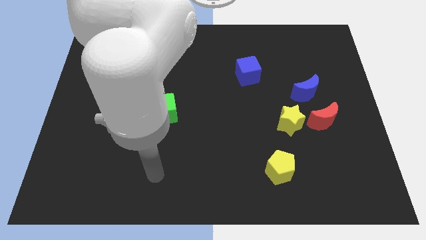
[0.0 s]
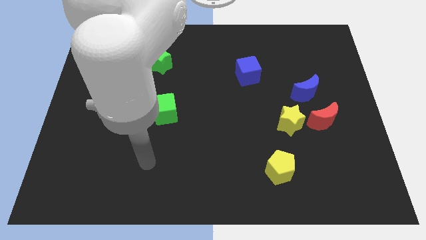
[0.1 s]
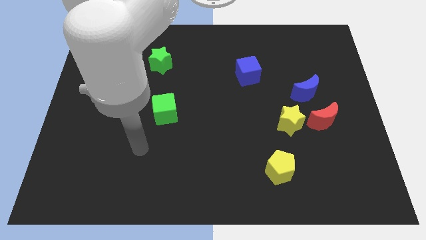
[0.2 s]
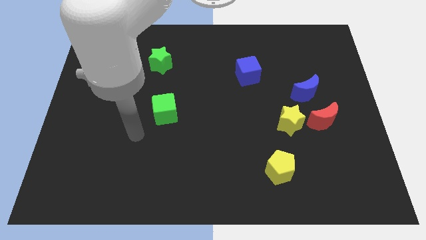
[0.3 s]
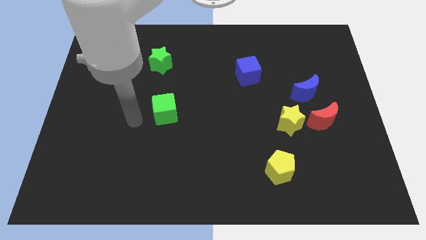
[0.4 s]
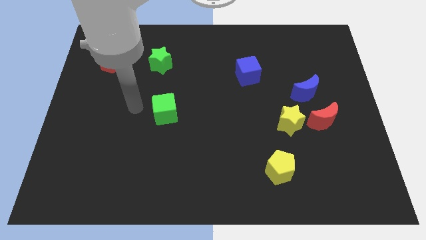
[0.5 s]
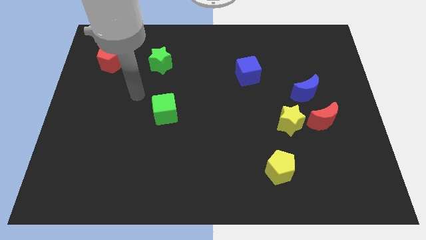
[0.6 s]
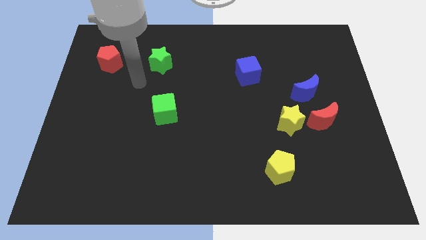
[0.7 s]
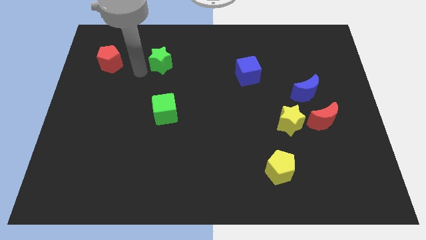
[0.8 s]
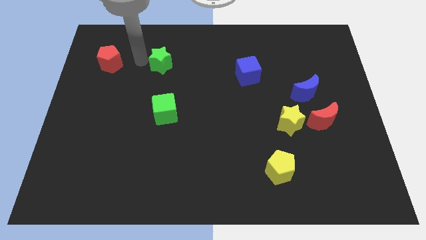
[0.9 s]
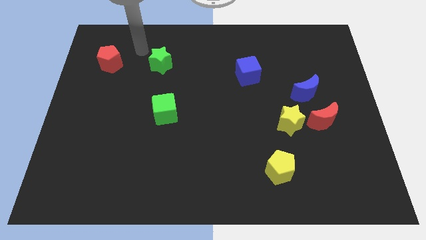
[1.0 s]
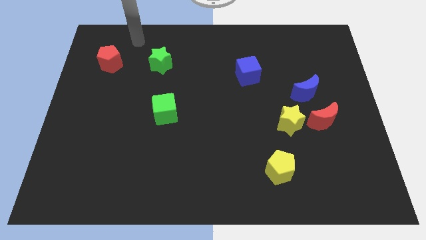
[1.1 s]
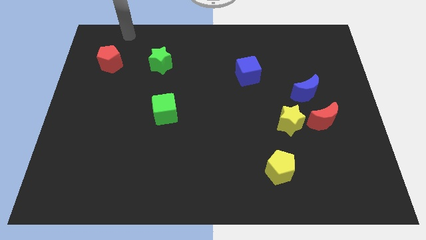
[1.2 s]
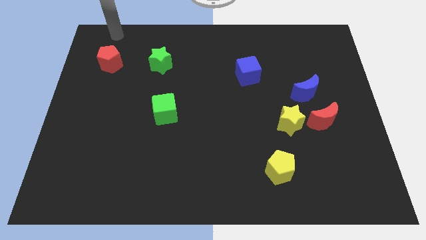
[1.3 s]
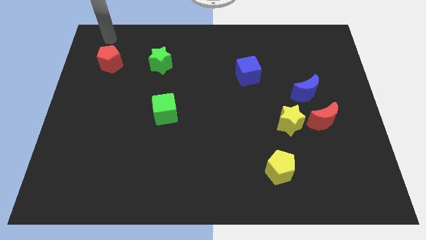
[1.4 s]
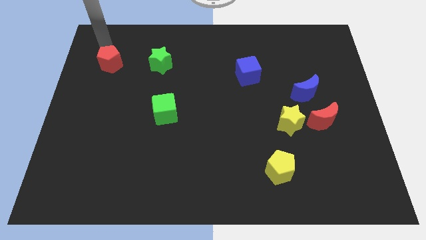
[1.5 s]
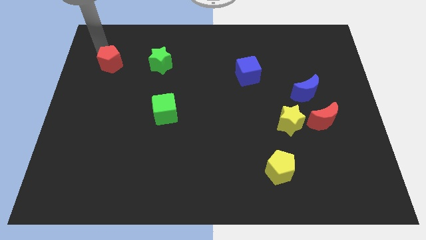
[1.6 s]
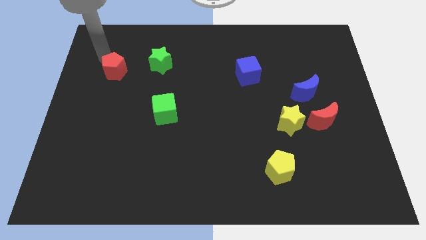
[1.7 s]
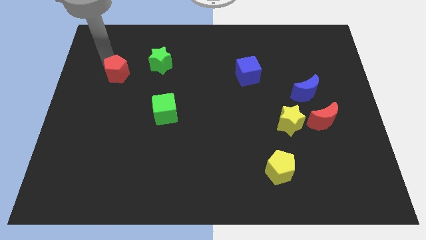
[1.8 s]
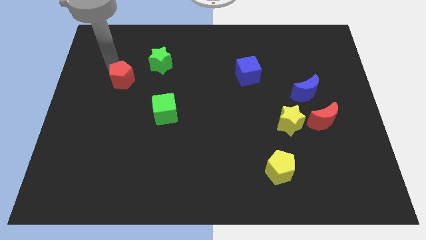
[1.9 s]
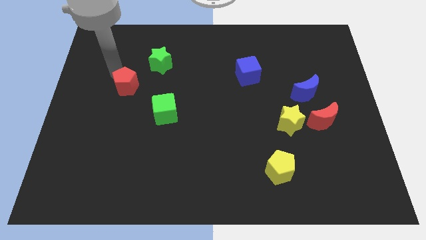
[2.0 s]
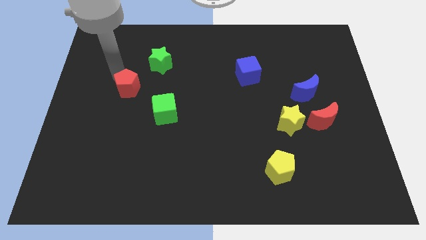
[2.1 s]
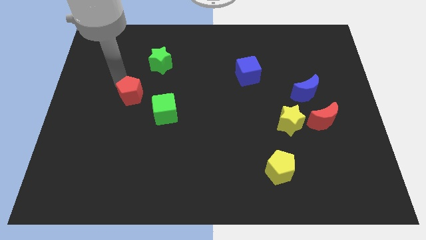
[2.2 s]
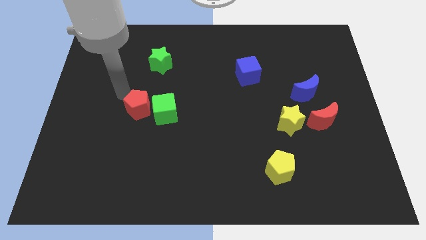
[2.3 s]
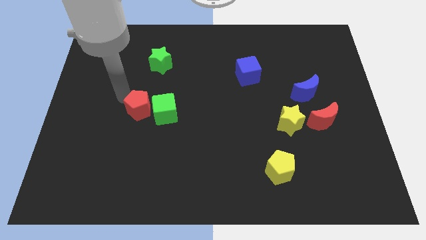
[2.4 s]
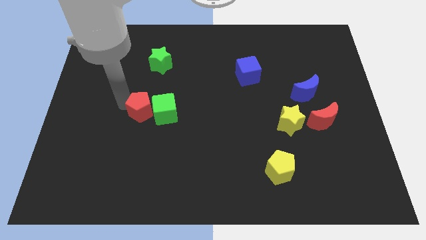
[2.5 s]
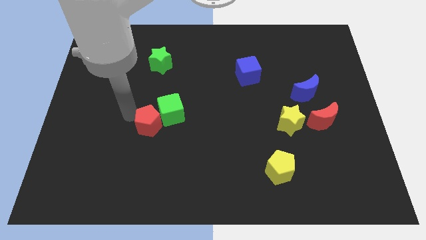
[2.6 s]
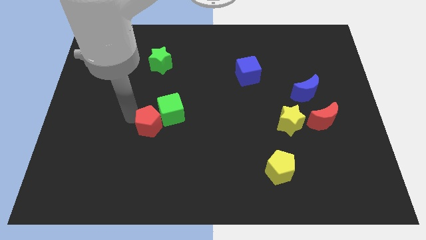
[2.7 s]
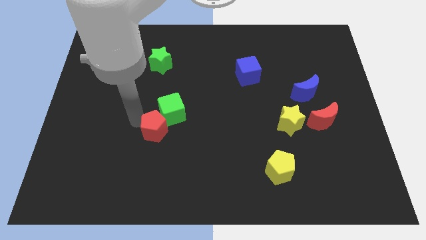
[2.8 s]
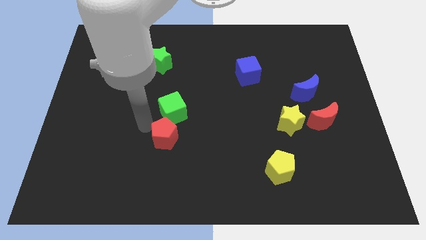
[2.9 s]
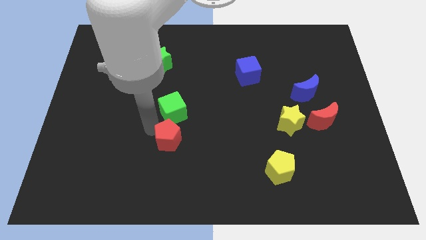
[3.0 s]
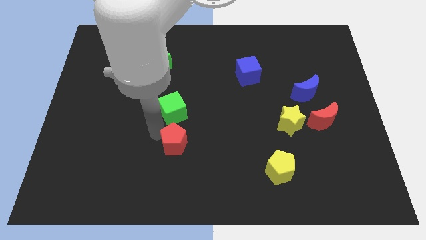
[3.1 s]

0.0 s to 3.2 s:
place the red pentagon vertically below the green cube

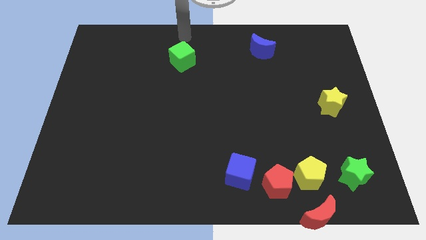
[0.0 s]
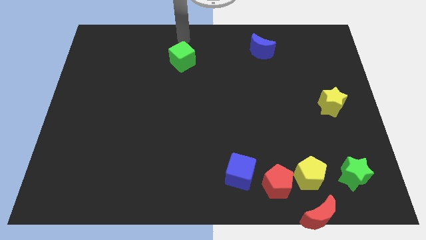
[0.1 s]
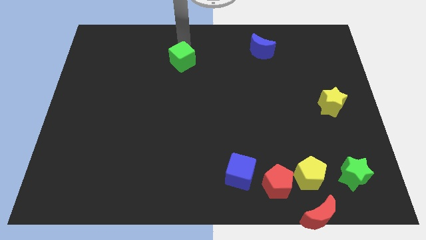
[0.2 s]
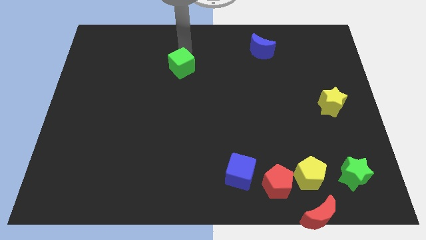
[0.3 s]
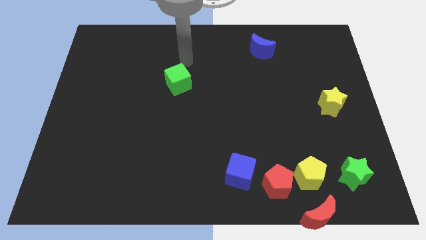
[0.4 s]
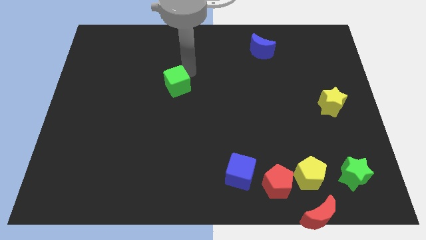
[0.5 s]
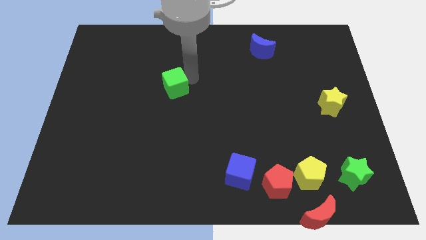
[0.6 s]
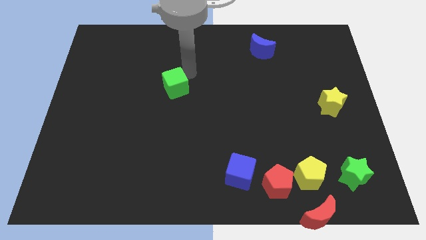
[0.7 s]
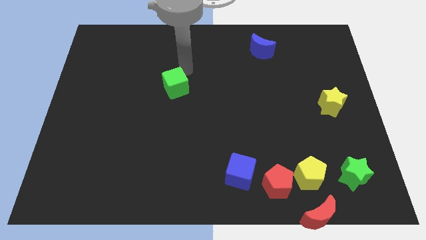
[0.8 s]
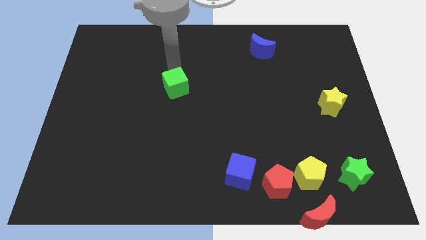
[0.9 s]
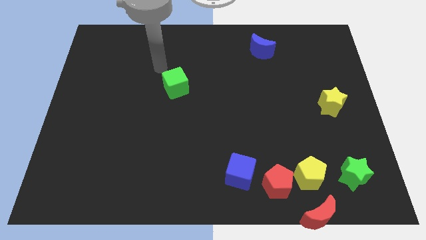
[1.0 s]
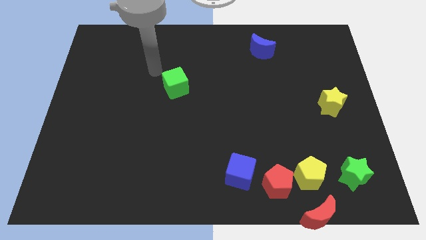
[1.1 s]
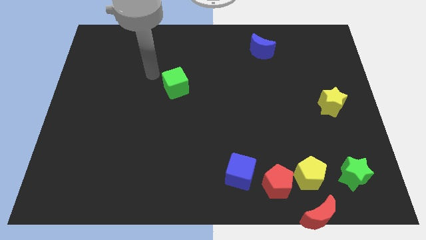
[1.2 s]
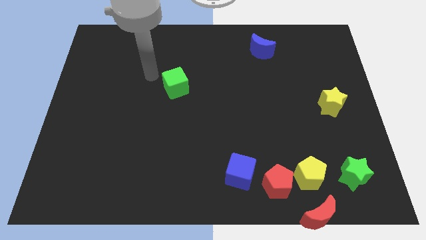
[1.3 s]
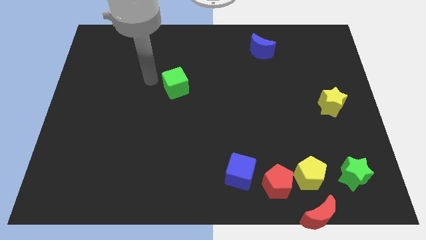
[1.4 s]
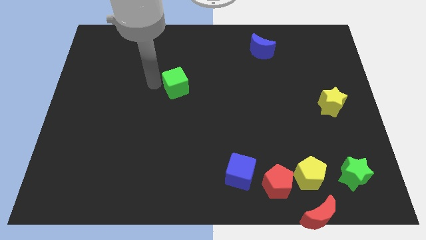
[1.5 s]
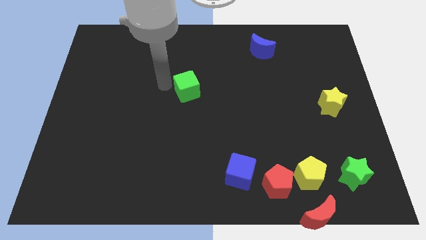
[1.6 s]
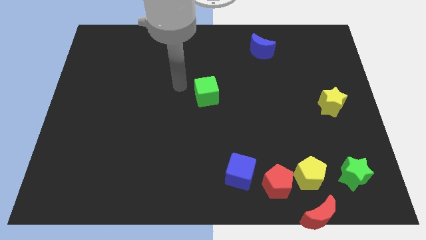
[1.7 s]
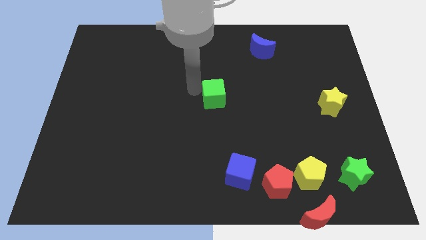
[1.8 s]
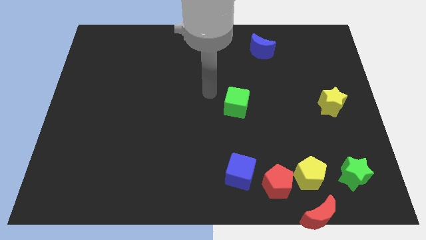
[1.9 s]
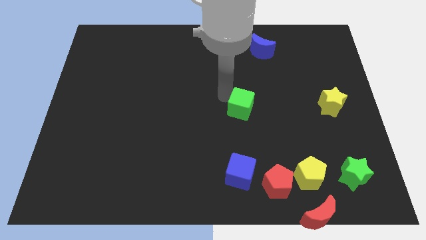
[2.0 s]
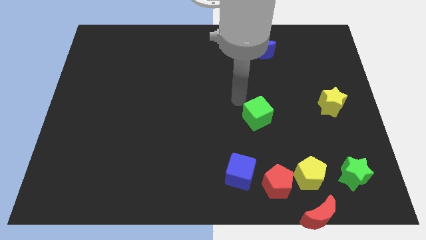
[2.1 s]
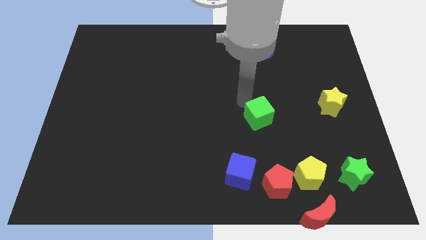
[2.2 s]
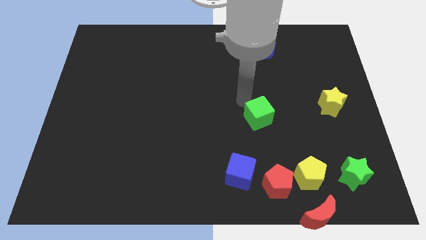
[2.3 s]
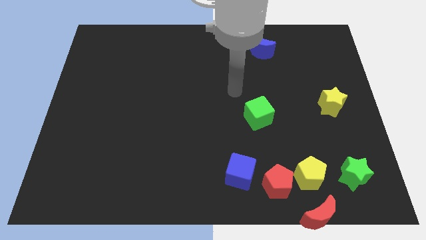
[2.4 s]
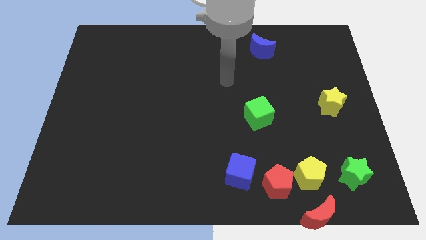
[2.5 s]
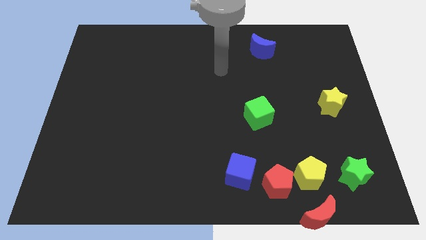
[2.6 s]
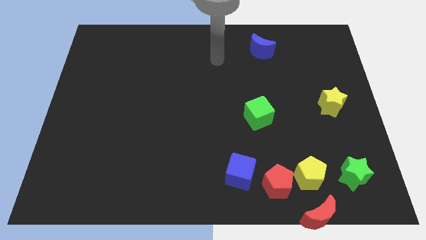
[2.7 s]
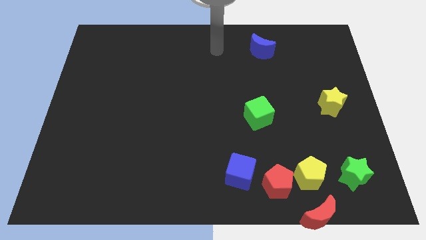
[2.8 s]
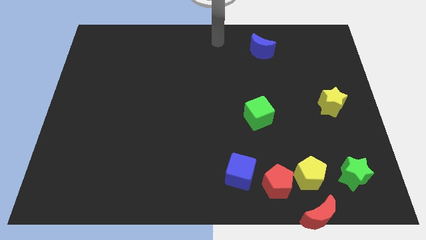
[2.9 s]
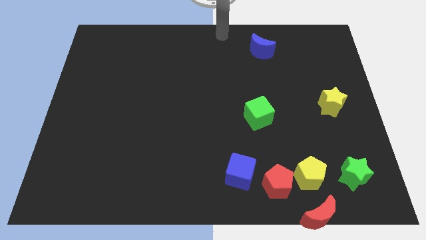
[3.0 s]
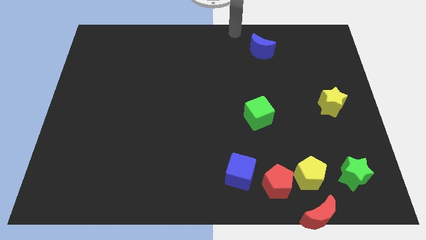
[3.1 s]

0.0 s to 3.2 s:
put the green cube at the top side of the red pentagon

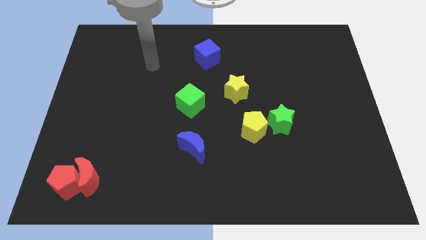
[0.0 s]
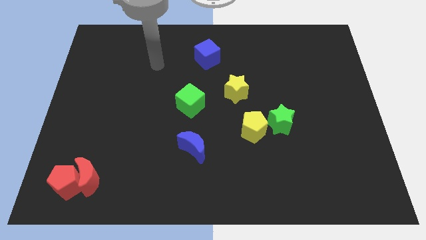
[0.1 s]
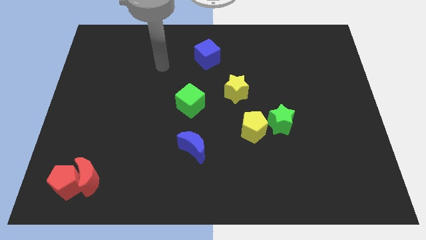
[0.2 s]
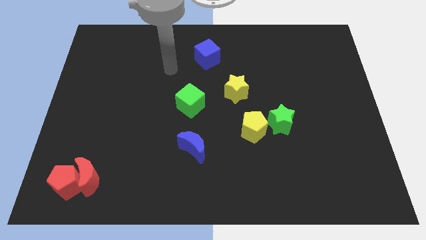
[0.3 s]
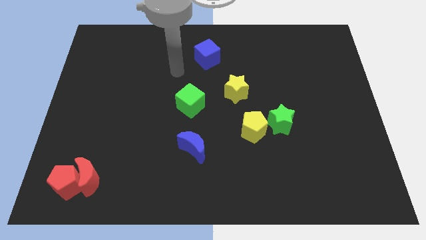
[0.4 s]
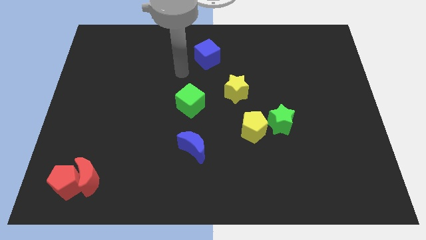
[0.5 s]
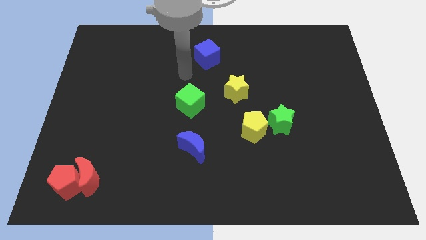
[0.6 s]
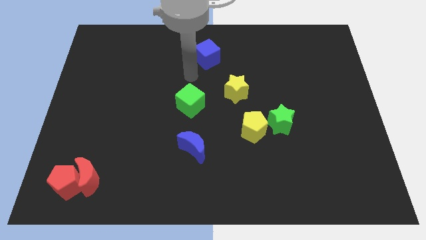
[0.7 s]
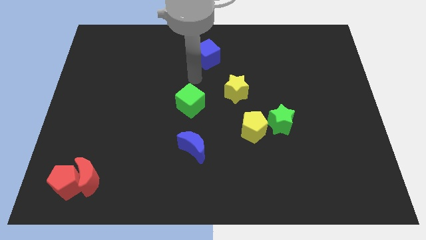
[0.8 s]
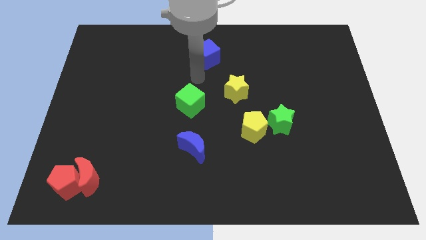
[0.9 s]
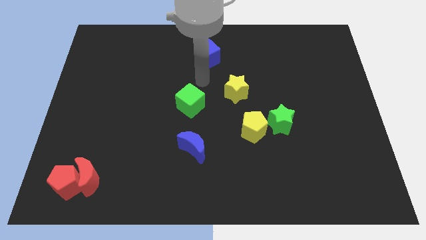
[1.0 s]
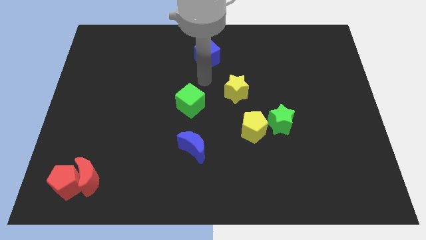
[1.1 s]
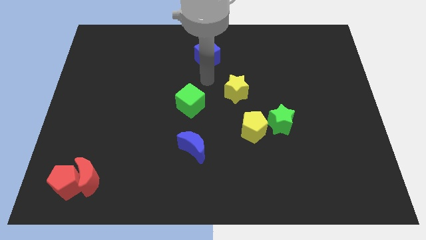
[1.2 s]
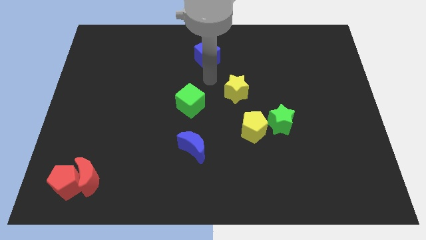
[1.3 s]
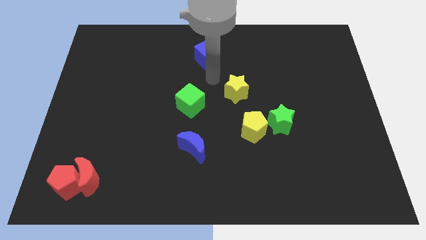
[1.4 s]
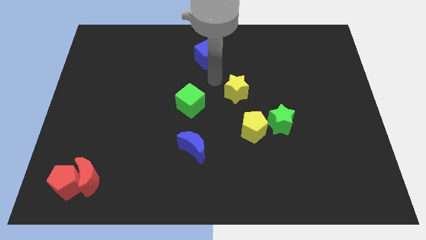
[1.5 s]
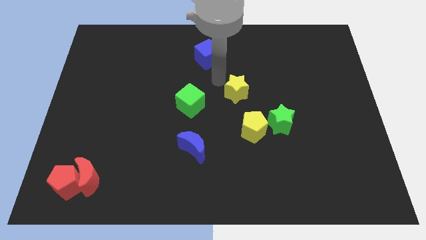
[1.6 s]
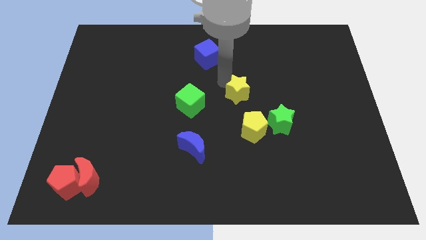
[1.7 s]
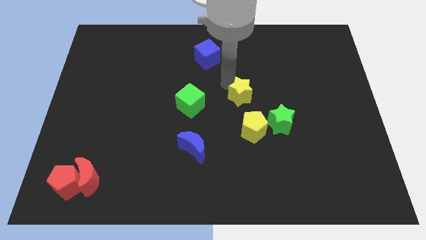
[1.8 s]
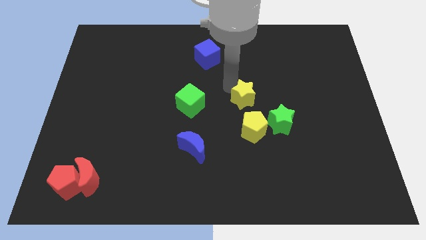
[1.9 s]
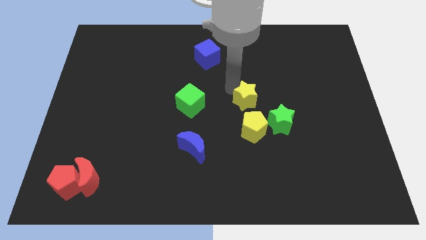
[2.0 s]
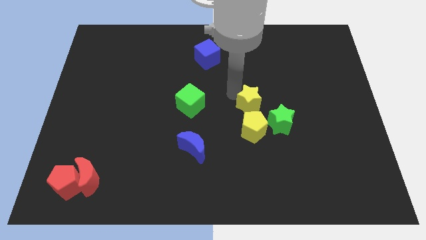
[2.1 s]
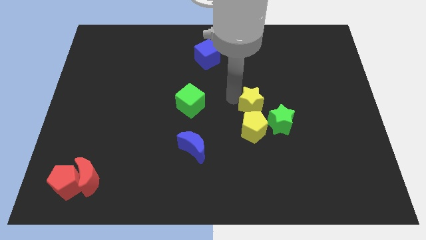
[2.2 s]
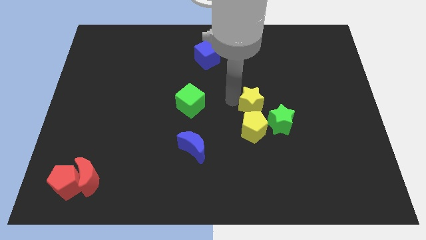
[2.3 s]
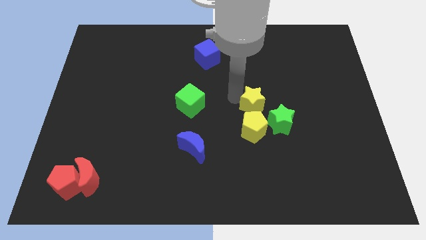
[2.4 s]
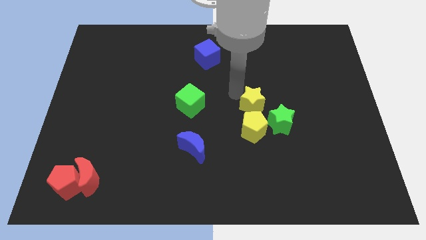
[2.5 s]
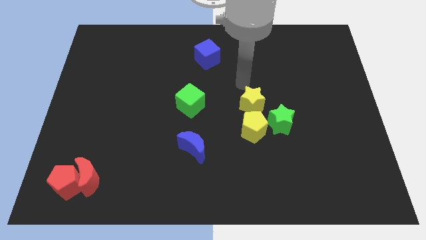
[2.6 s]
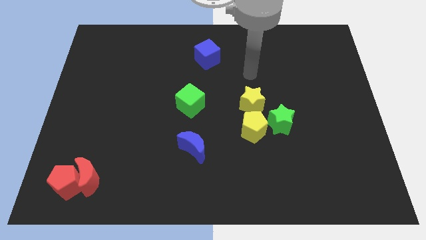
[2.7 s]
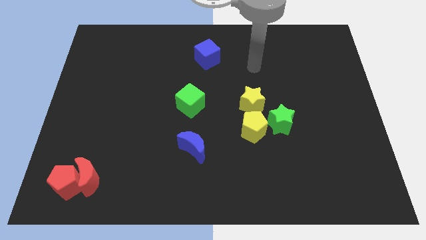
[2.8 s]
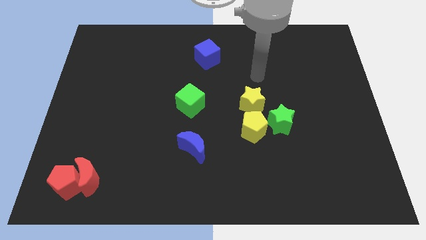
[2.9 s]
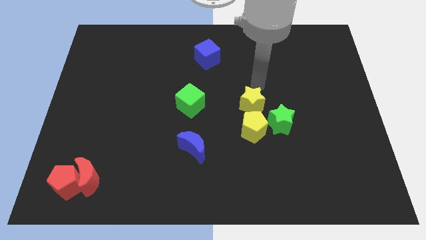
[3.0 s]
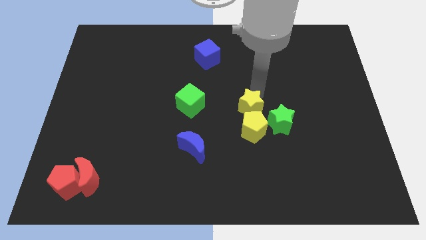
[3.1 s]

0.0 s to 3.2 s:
place the yellow star above the yellow pentagon
